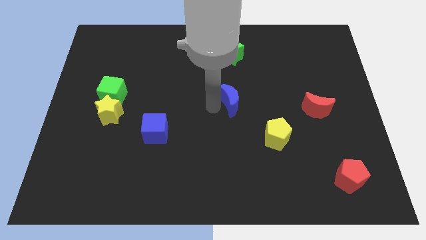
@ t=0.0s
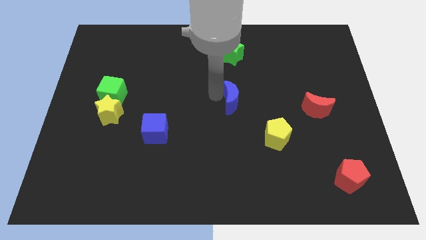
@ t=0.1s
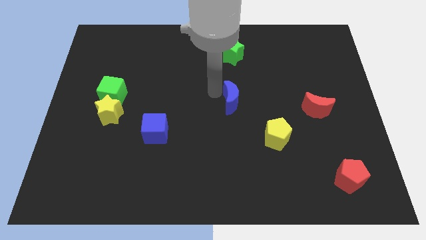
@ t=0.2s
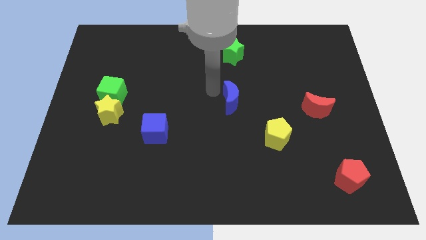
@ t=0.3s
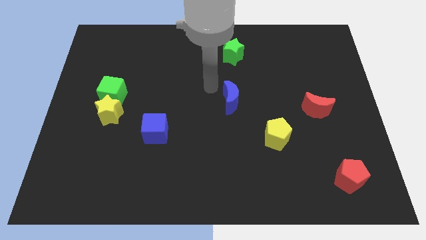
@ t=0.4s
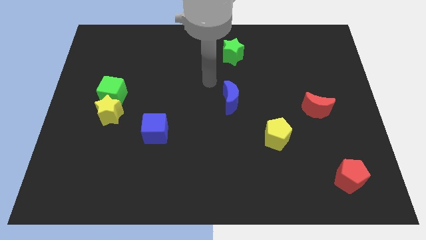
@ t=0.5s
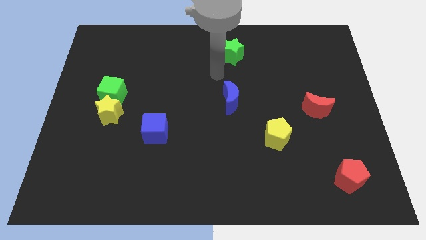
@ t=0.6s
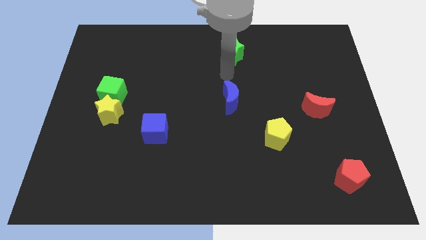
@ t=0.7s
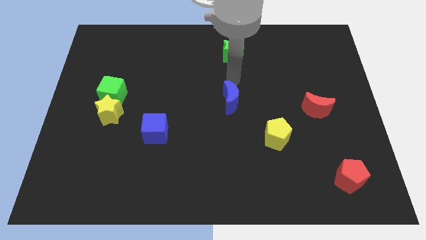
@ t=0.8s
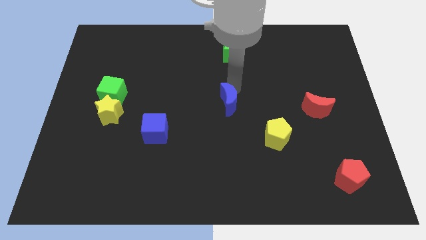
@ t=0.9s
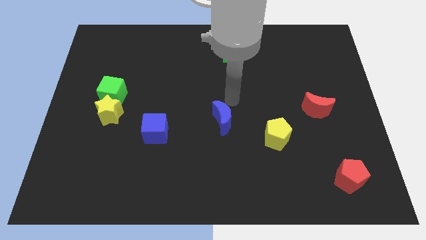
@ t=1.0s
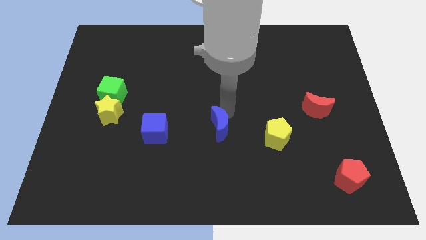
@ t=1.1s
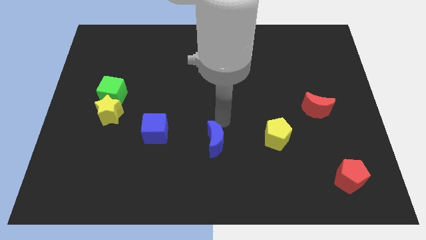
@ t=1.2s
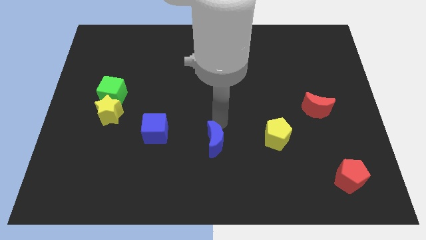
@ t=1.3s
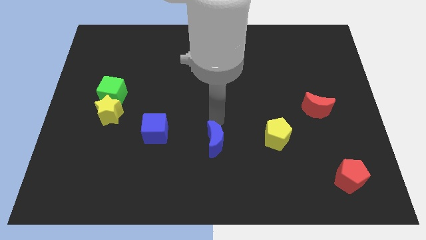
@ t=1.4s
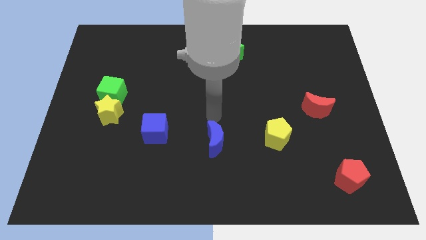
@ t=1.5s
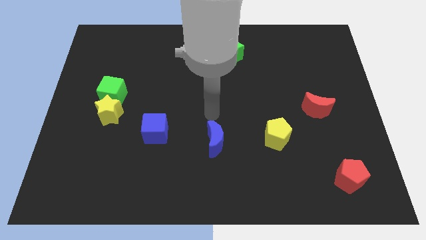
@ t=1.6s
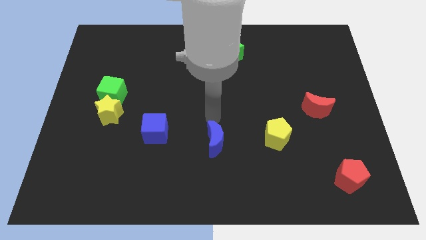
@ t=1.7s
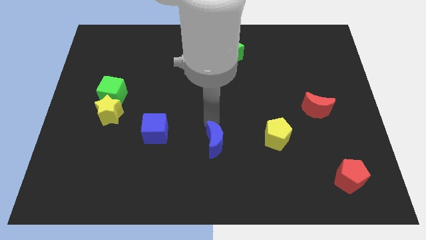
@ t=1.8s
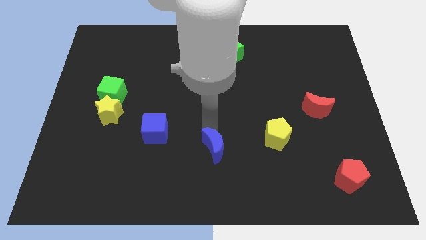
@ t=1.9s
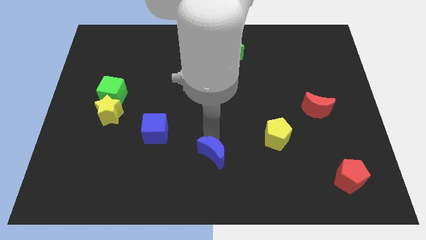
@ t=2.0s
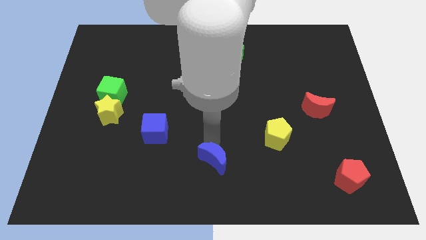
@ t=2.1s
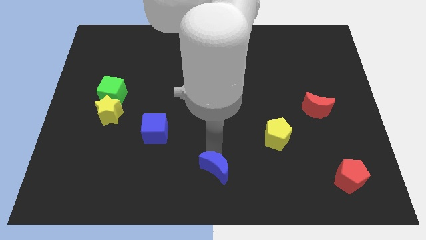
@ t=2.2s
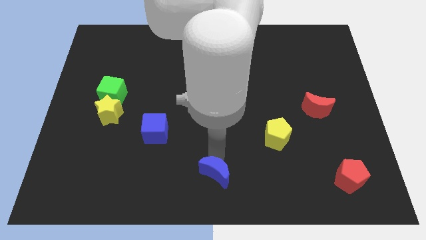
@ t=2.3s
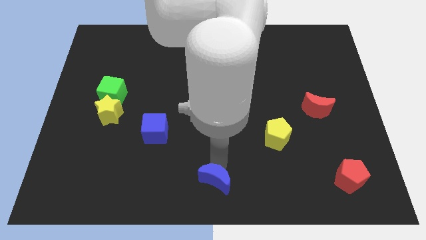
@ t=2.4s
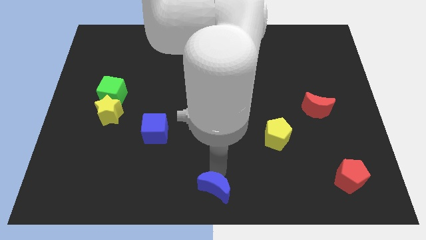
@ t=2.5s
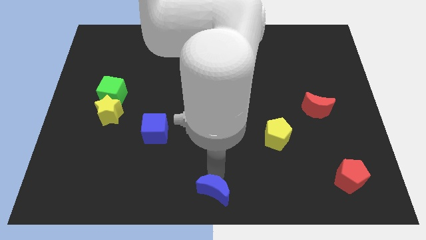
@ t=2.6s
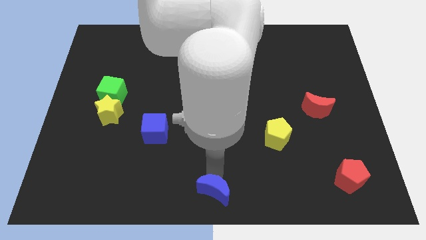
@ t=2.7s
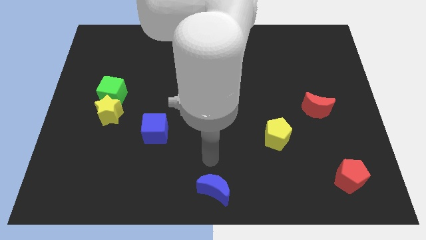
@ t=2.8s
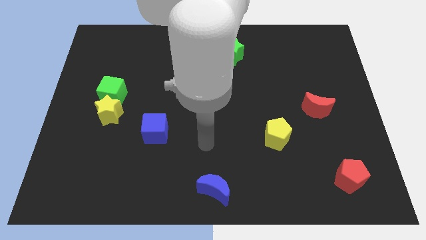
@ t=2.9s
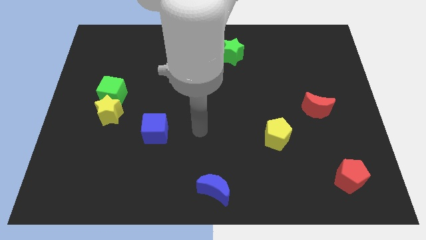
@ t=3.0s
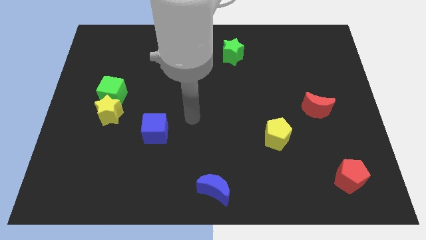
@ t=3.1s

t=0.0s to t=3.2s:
move the blue crescent to the bottom center of the board

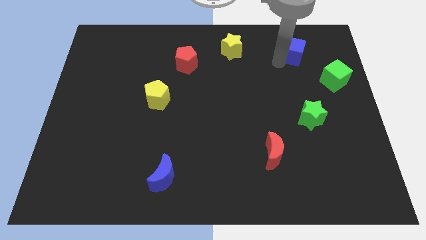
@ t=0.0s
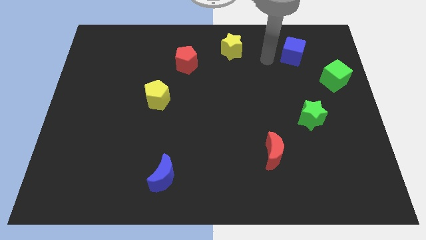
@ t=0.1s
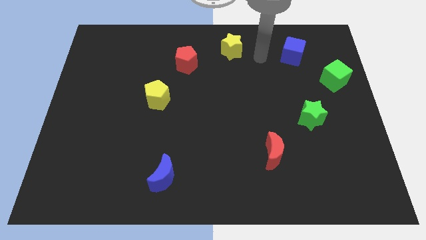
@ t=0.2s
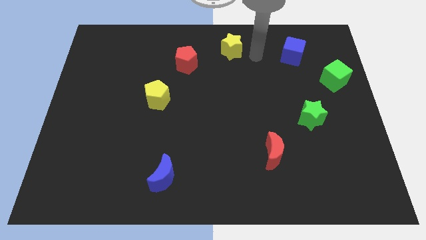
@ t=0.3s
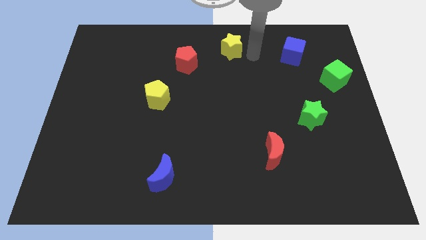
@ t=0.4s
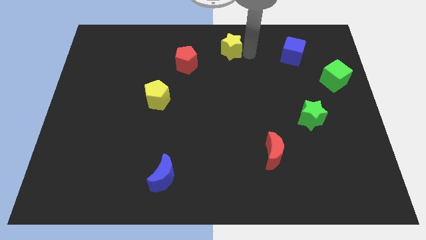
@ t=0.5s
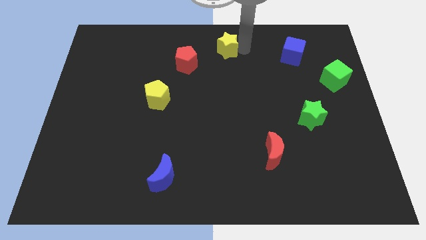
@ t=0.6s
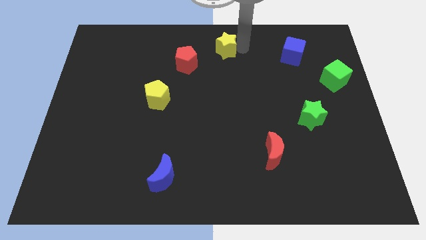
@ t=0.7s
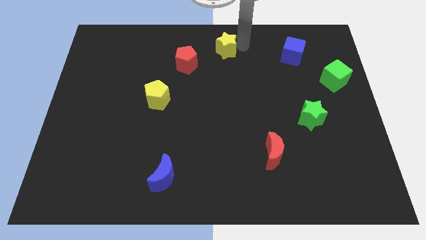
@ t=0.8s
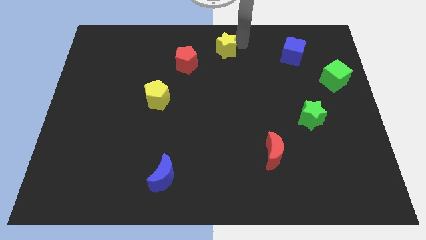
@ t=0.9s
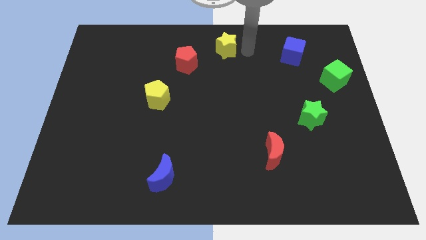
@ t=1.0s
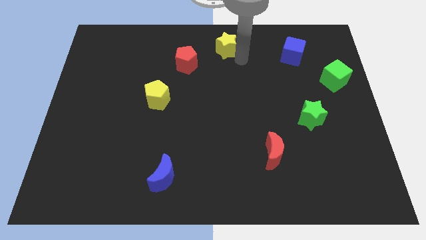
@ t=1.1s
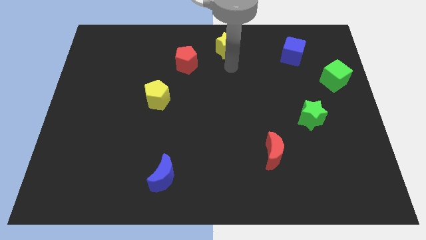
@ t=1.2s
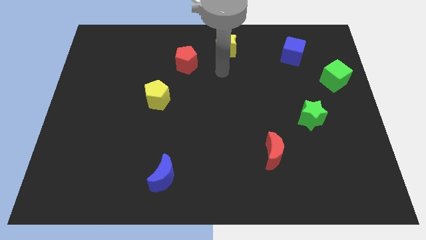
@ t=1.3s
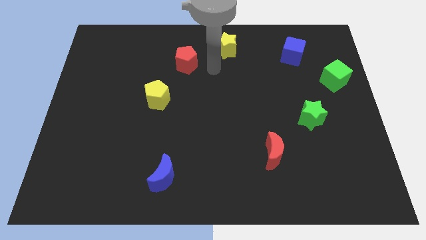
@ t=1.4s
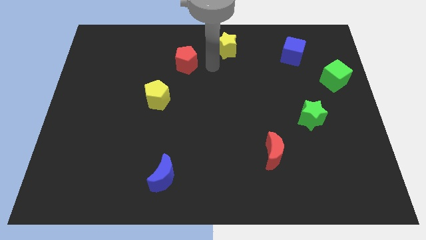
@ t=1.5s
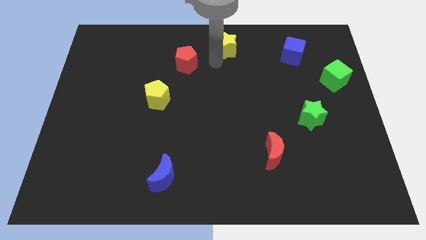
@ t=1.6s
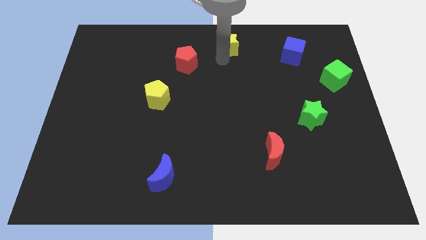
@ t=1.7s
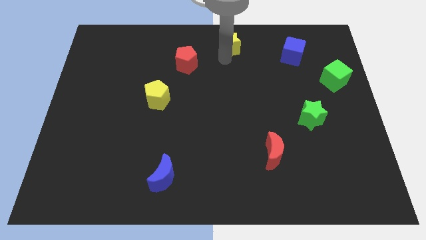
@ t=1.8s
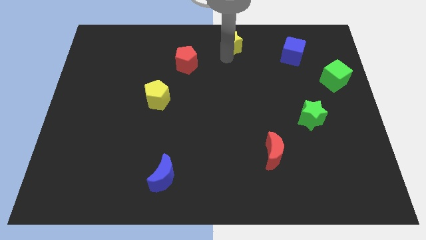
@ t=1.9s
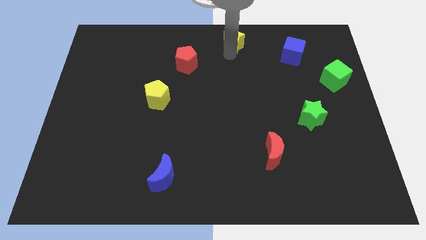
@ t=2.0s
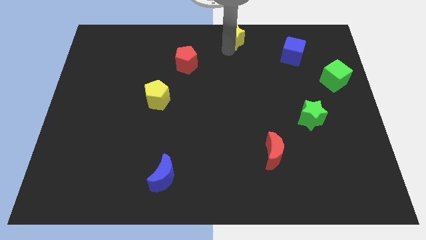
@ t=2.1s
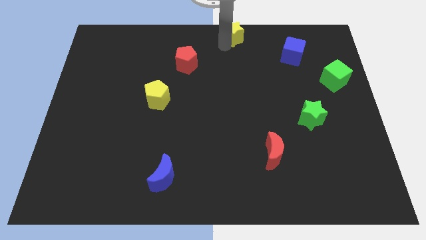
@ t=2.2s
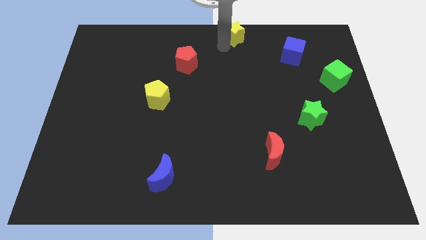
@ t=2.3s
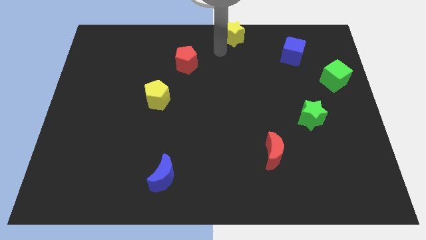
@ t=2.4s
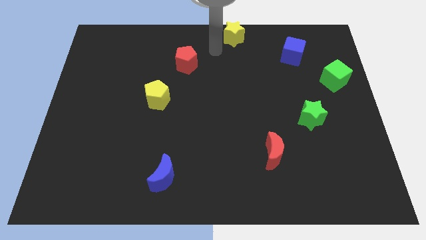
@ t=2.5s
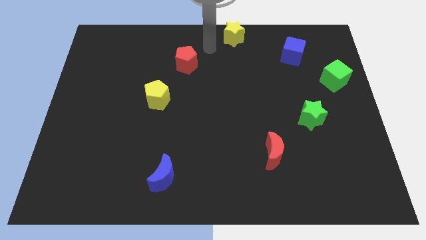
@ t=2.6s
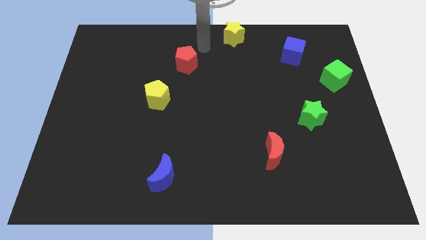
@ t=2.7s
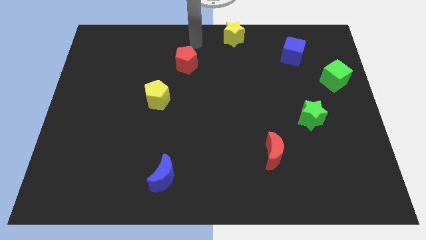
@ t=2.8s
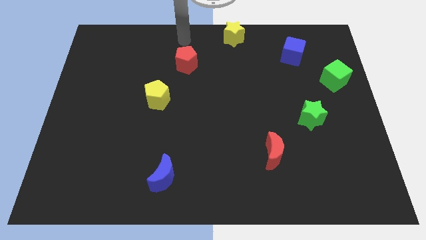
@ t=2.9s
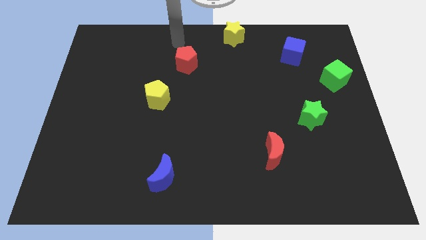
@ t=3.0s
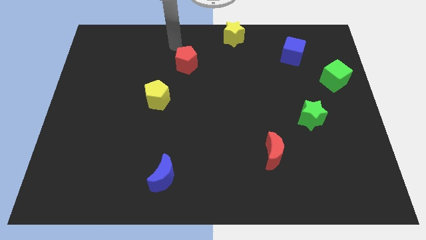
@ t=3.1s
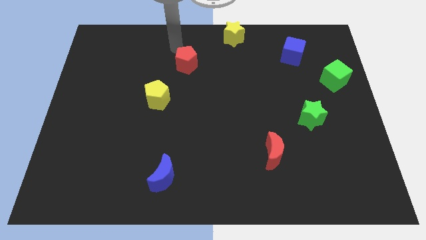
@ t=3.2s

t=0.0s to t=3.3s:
place the yellow star at the top center of the board

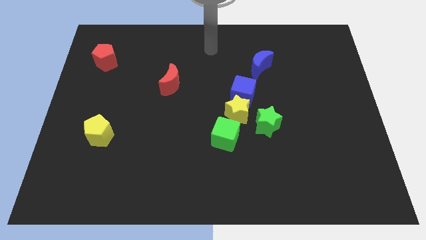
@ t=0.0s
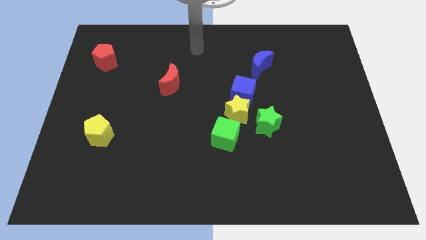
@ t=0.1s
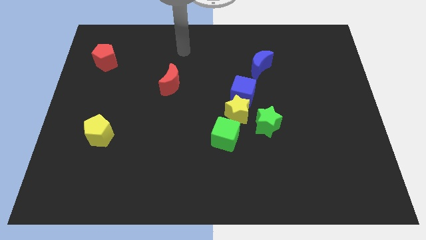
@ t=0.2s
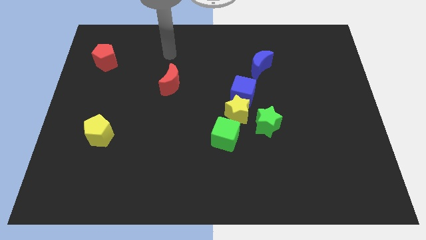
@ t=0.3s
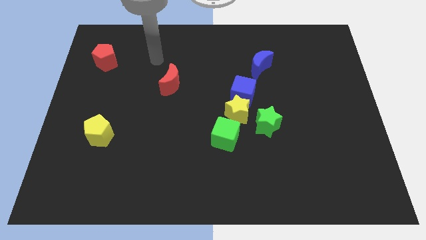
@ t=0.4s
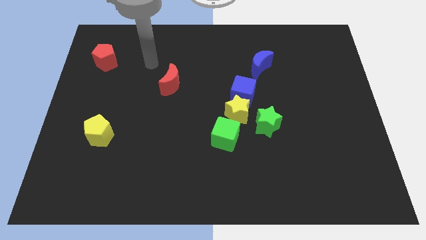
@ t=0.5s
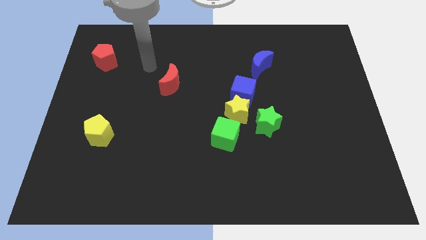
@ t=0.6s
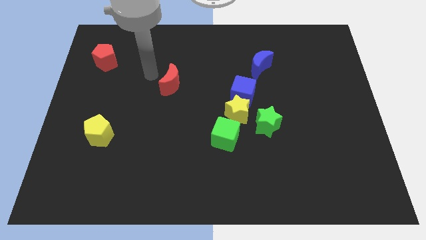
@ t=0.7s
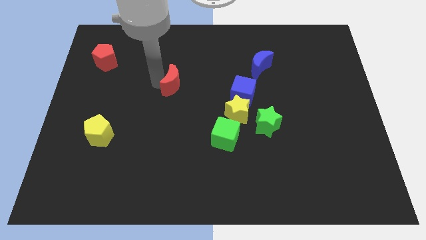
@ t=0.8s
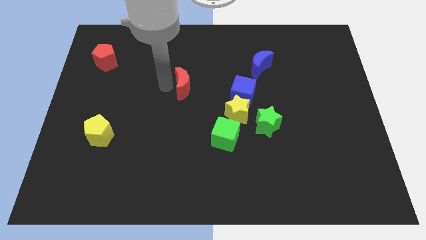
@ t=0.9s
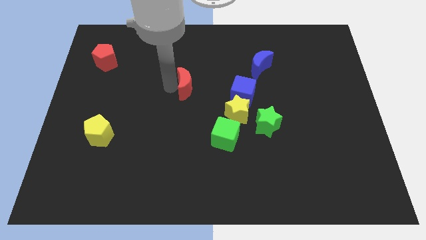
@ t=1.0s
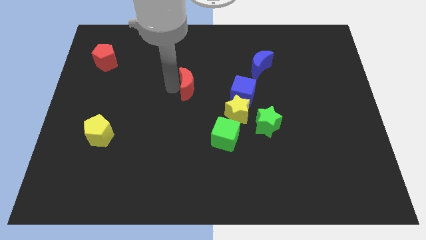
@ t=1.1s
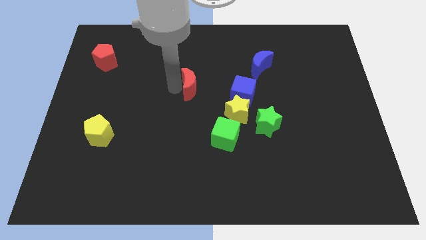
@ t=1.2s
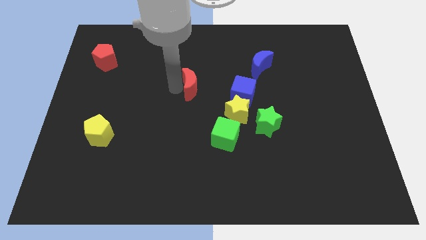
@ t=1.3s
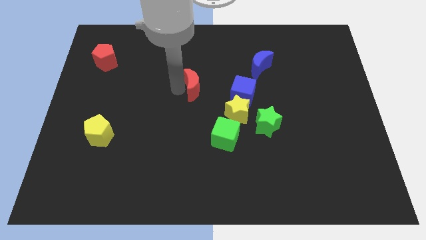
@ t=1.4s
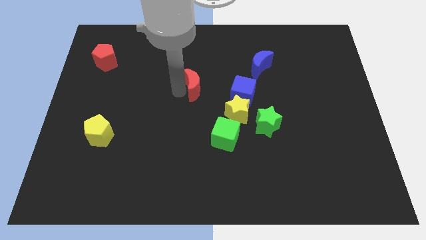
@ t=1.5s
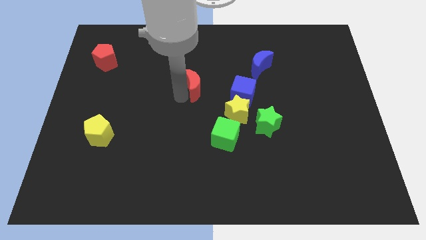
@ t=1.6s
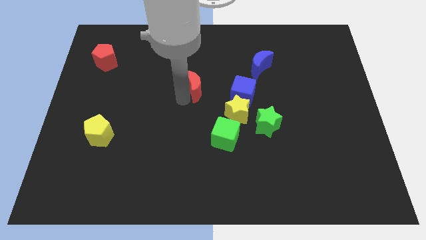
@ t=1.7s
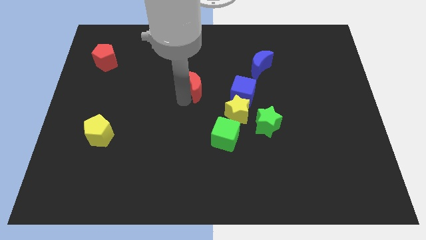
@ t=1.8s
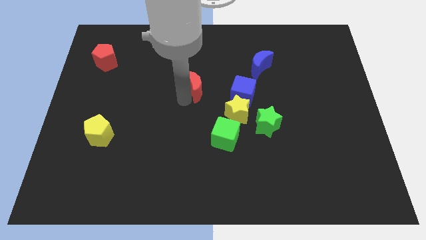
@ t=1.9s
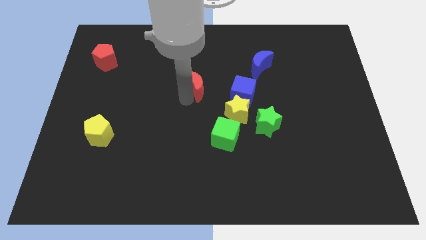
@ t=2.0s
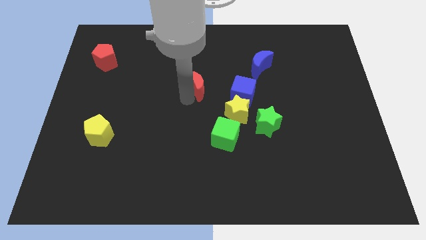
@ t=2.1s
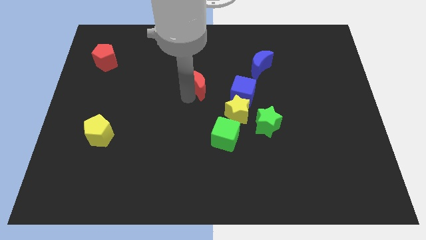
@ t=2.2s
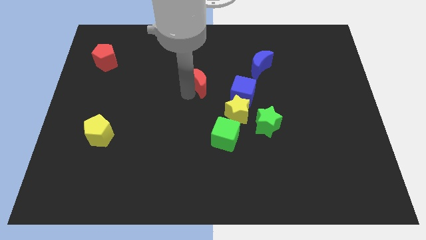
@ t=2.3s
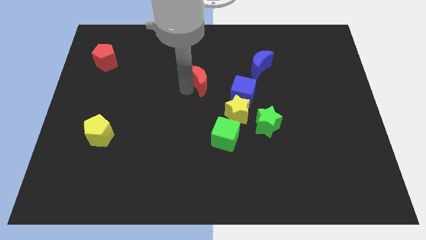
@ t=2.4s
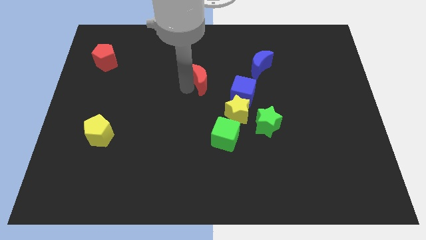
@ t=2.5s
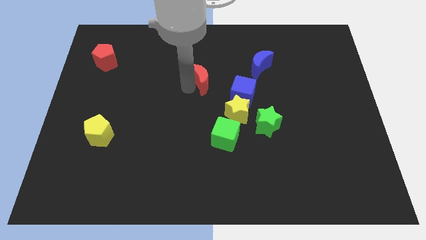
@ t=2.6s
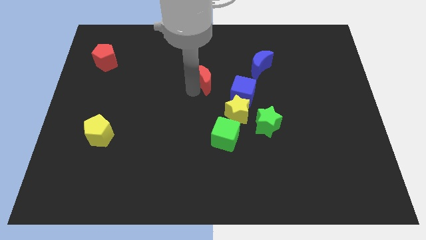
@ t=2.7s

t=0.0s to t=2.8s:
place the red crescent left to the blue cube
